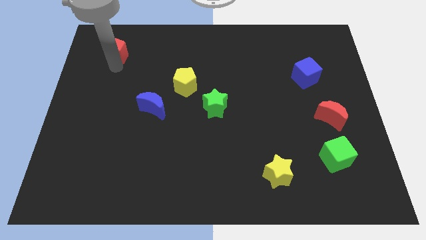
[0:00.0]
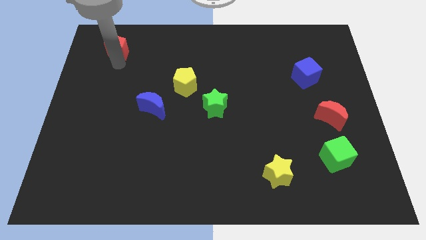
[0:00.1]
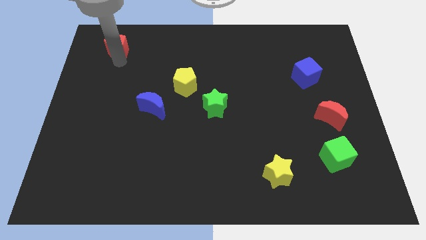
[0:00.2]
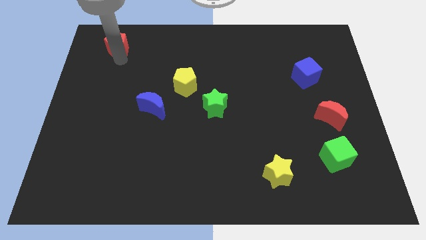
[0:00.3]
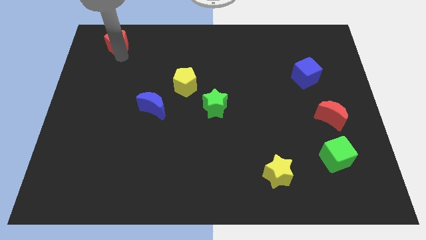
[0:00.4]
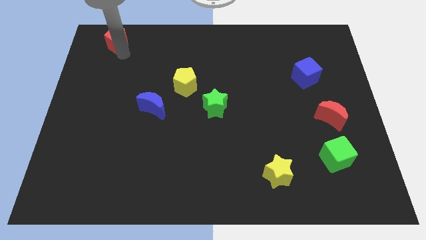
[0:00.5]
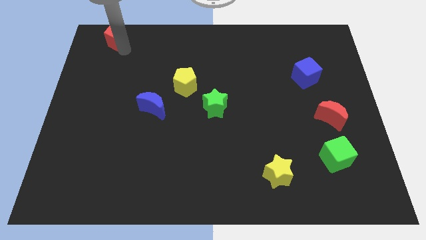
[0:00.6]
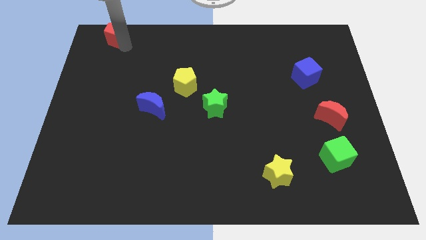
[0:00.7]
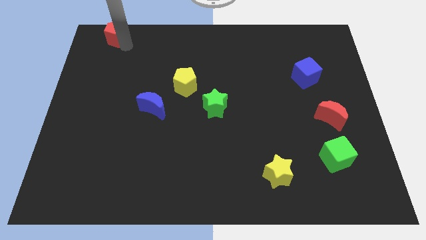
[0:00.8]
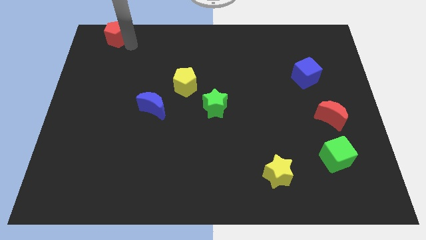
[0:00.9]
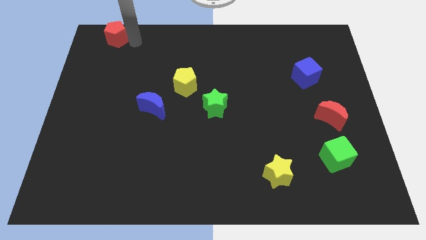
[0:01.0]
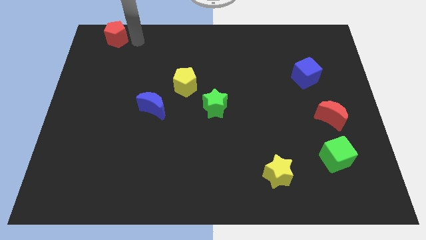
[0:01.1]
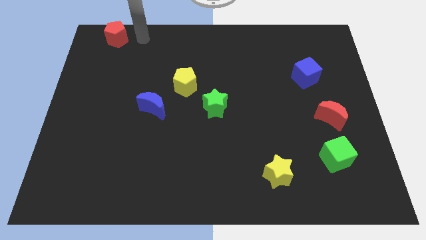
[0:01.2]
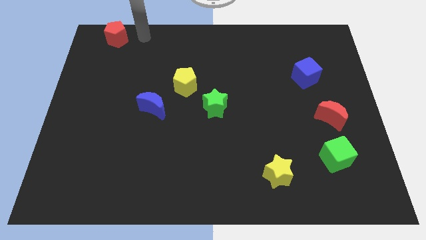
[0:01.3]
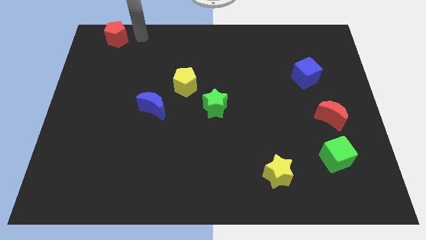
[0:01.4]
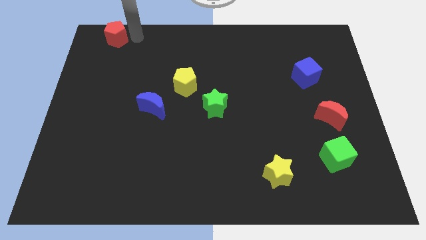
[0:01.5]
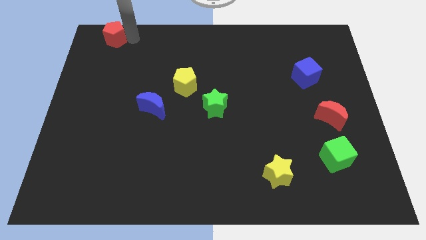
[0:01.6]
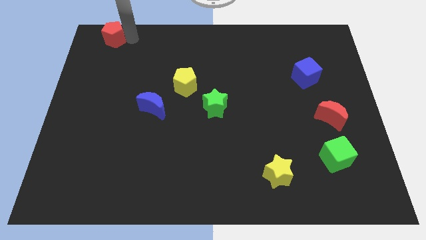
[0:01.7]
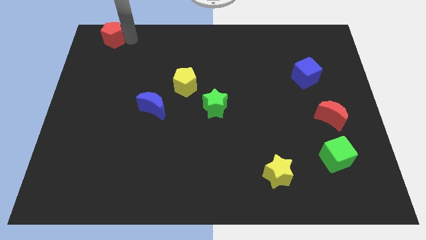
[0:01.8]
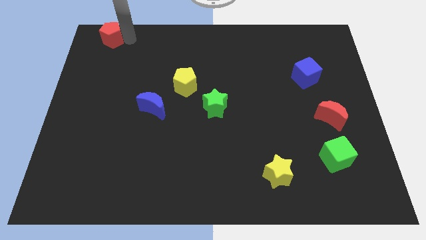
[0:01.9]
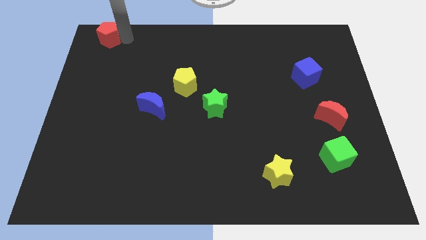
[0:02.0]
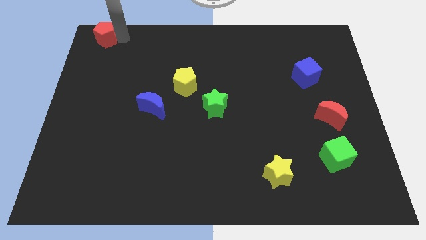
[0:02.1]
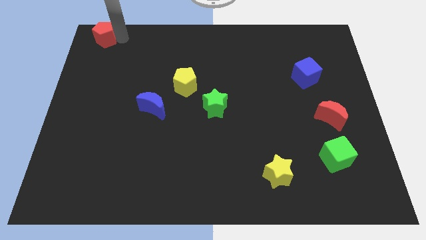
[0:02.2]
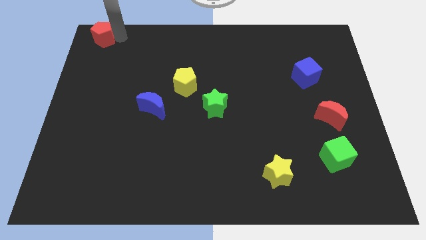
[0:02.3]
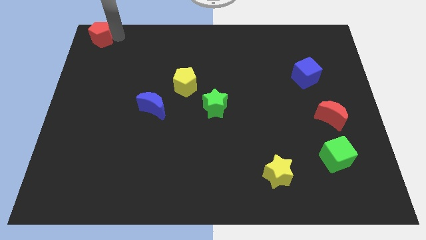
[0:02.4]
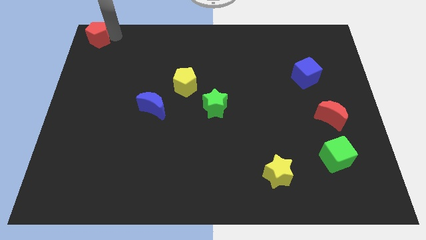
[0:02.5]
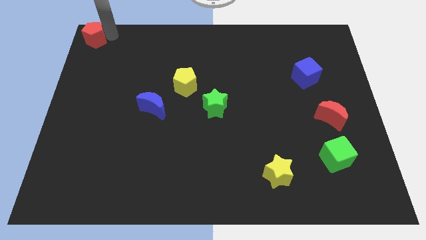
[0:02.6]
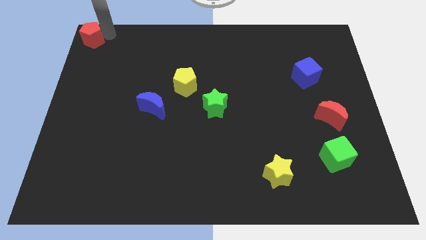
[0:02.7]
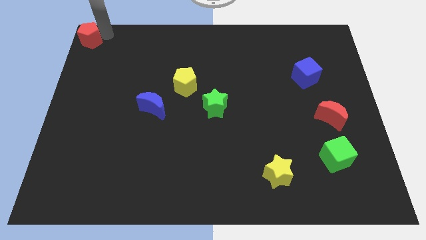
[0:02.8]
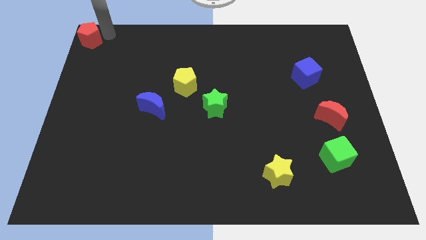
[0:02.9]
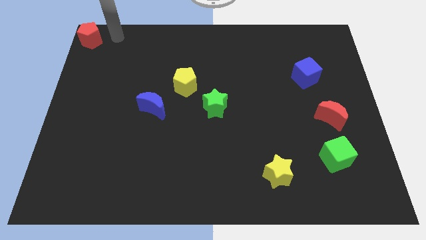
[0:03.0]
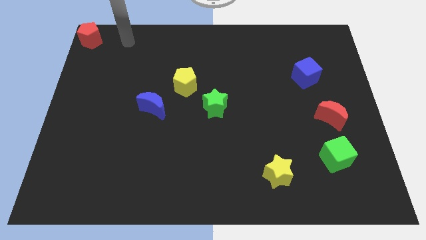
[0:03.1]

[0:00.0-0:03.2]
place the red pentagon at the top left corner of the board

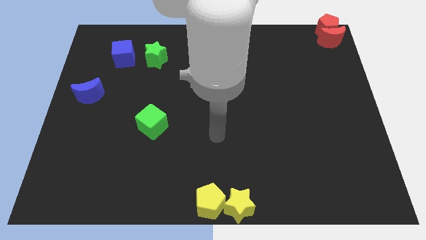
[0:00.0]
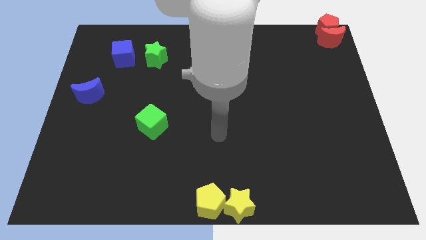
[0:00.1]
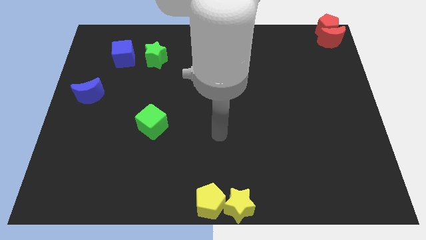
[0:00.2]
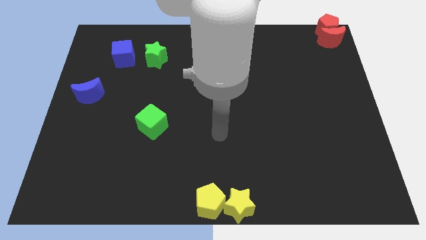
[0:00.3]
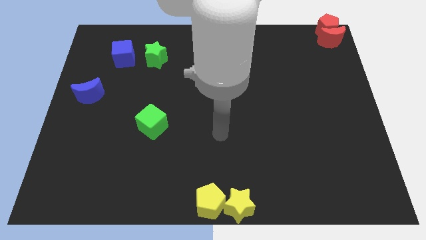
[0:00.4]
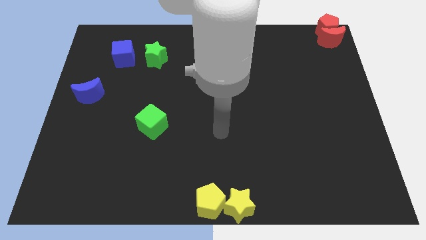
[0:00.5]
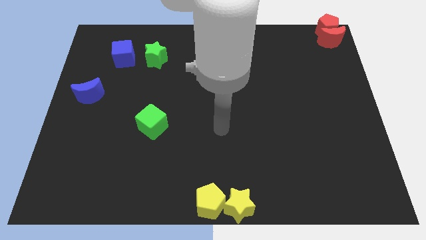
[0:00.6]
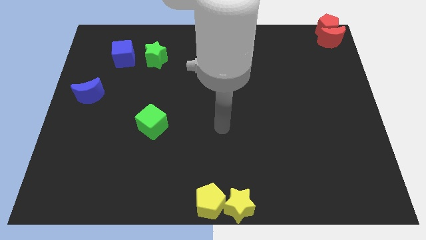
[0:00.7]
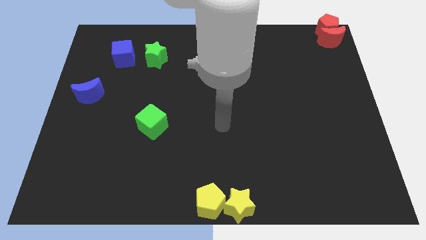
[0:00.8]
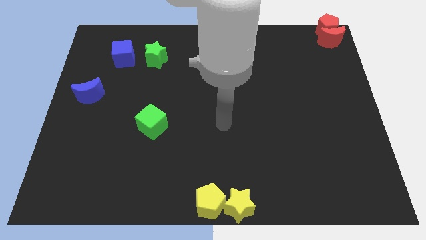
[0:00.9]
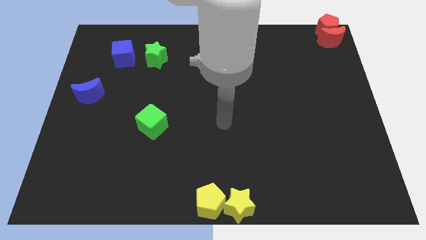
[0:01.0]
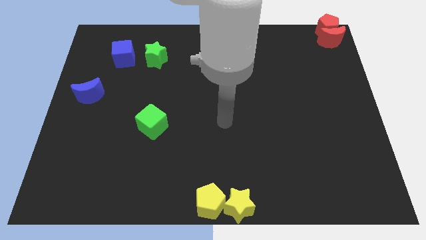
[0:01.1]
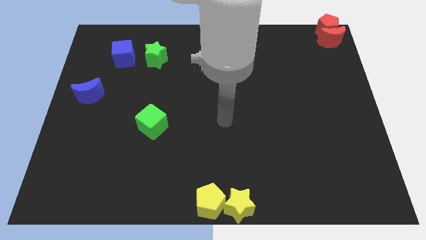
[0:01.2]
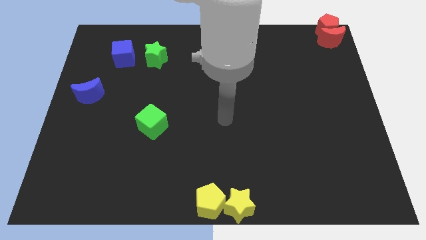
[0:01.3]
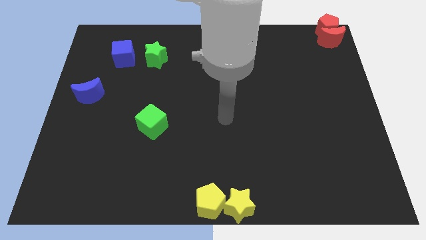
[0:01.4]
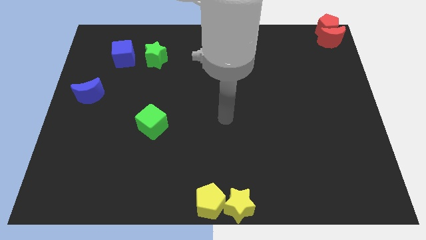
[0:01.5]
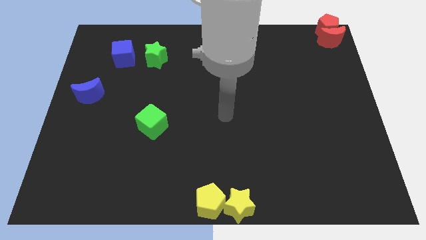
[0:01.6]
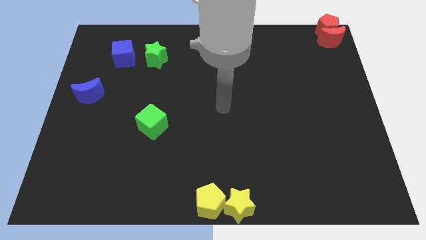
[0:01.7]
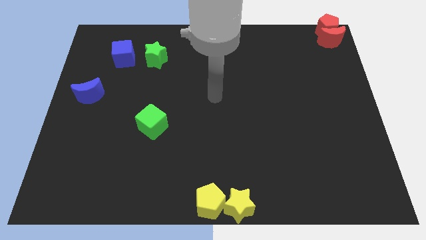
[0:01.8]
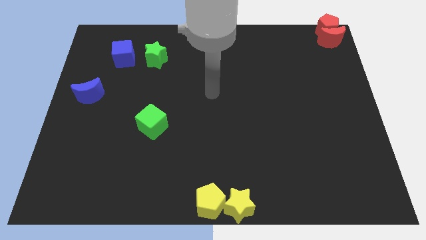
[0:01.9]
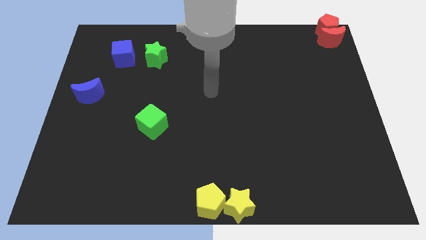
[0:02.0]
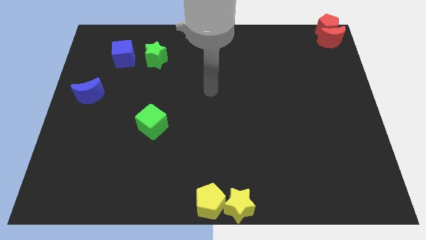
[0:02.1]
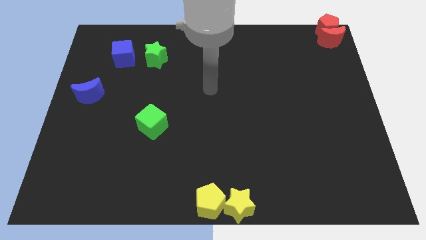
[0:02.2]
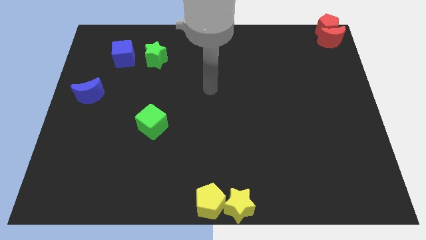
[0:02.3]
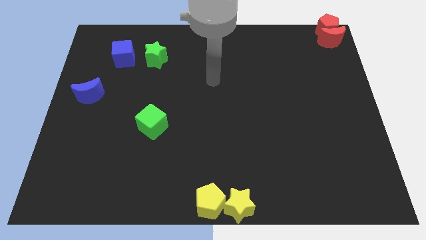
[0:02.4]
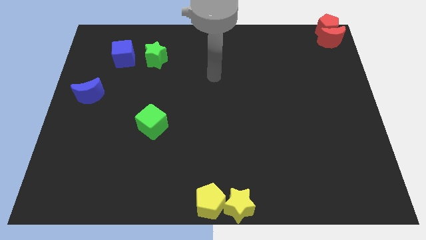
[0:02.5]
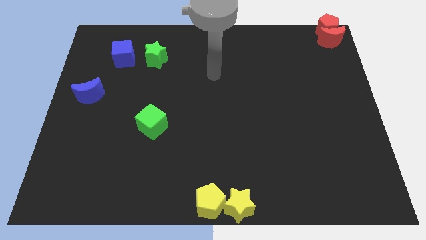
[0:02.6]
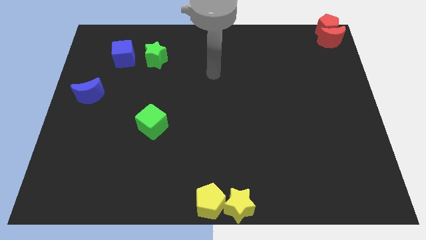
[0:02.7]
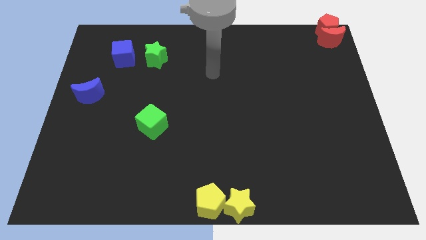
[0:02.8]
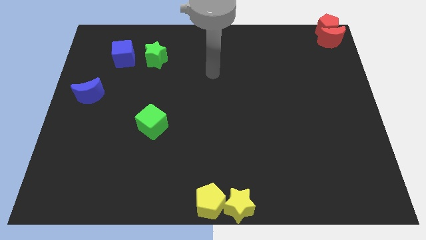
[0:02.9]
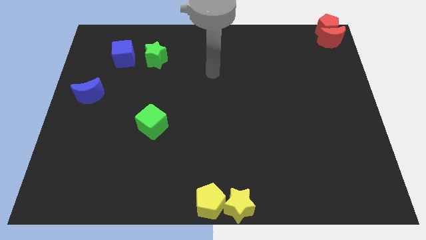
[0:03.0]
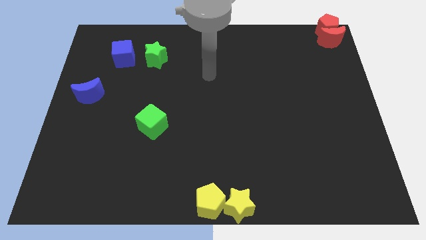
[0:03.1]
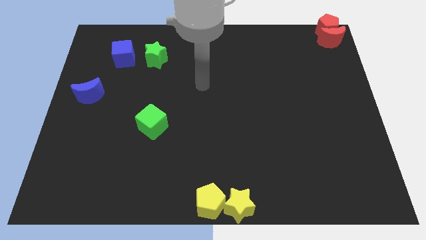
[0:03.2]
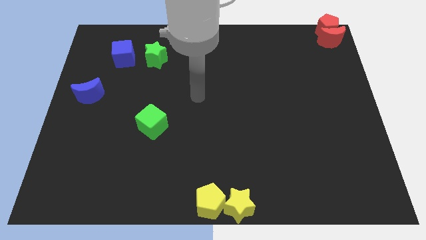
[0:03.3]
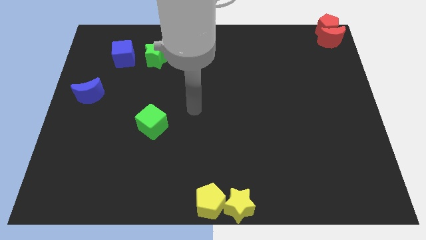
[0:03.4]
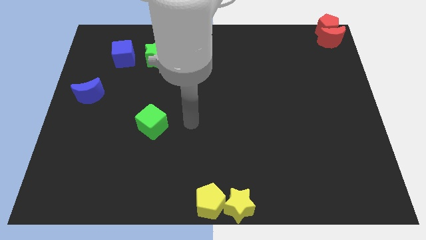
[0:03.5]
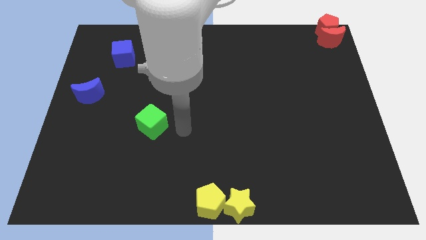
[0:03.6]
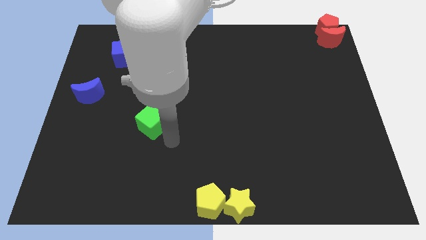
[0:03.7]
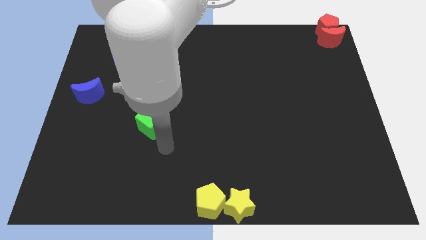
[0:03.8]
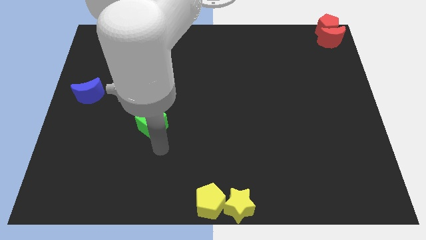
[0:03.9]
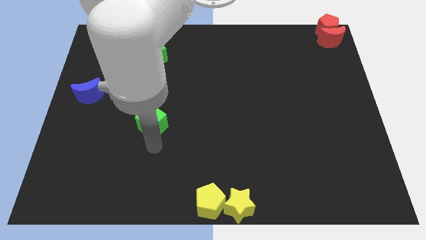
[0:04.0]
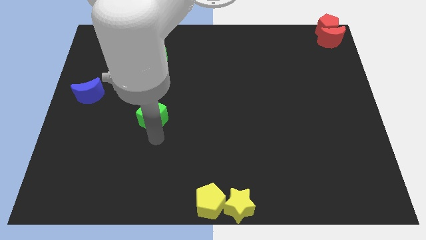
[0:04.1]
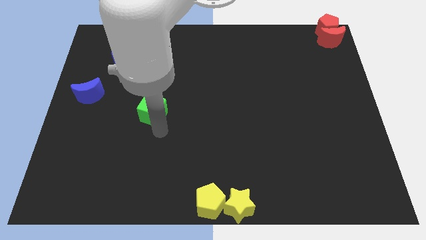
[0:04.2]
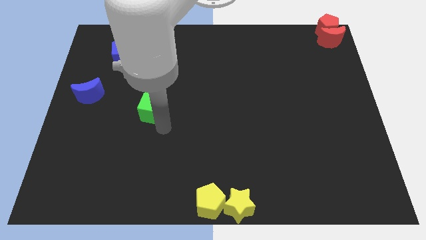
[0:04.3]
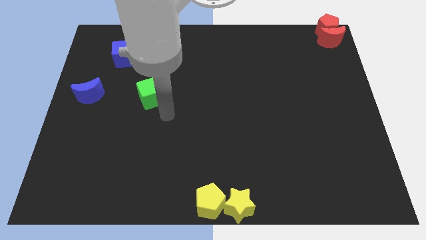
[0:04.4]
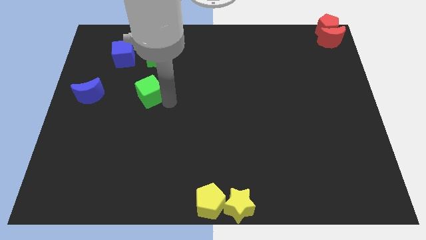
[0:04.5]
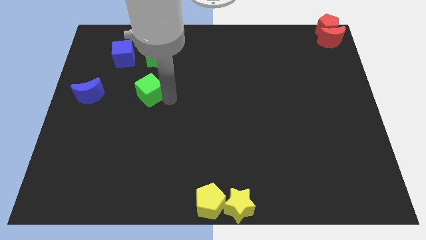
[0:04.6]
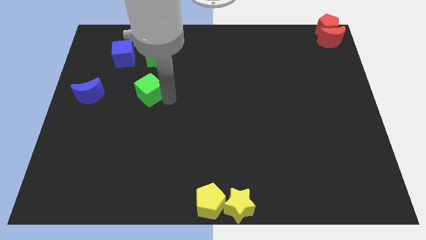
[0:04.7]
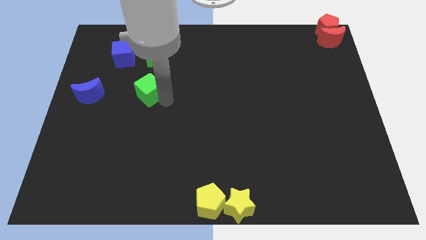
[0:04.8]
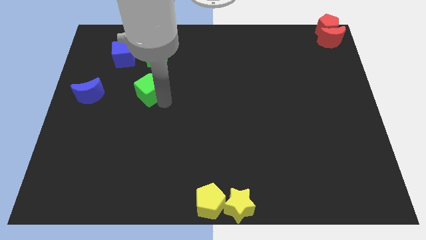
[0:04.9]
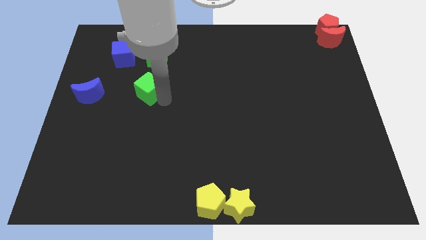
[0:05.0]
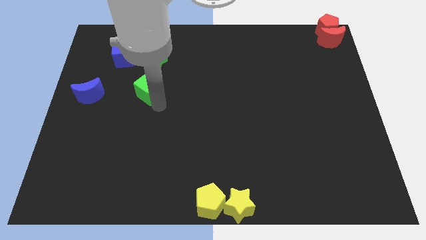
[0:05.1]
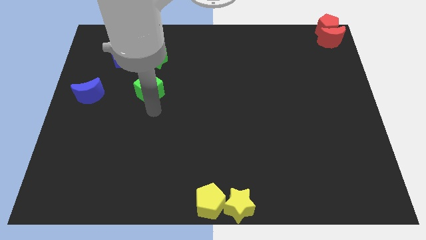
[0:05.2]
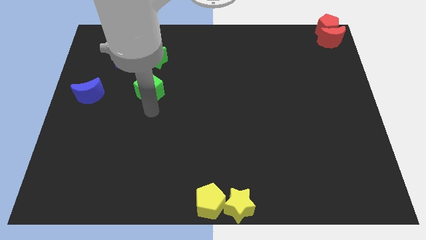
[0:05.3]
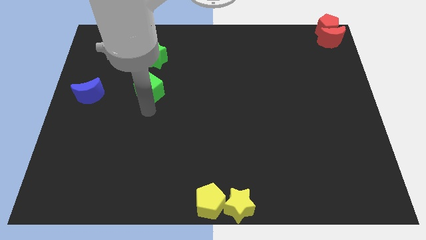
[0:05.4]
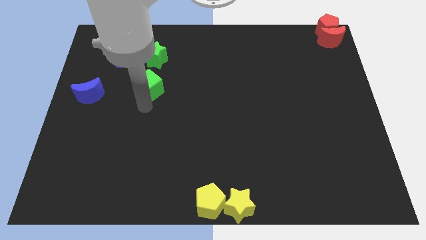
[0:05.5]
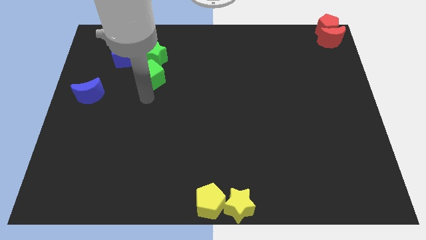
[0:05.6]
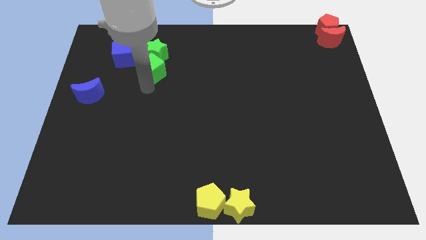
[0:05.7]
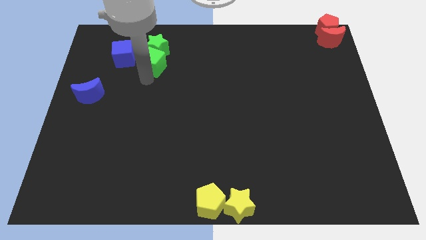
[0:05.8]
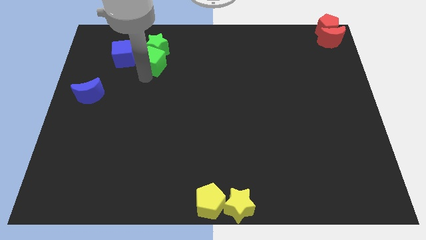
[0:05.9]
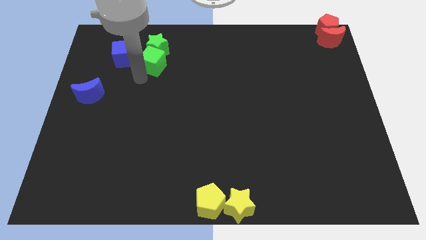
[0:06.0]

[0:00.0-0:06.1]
push the green cube into the green star
